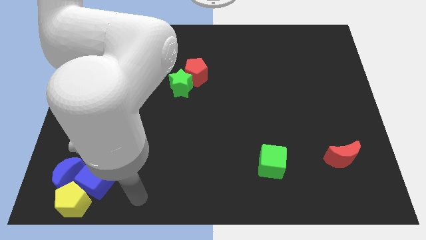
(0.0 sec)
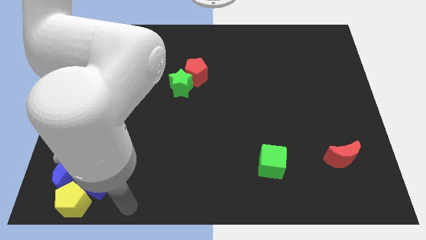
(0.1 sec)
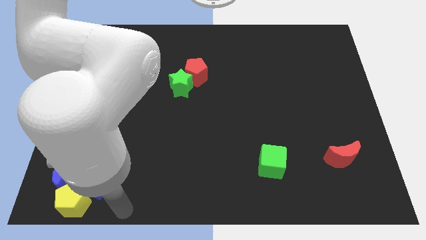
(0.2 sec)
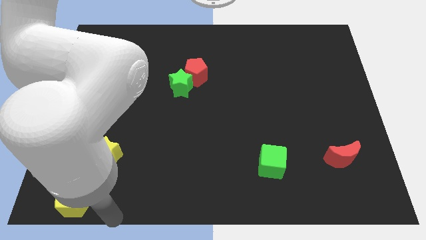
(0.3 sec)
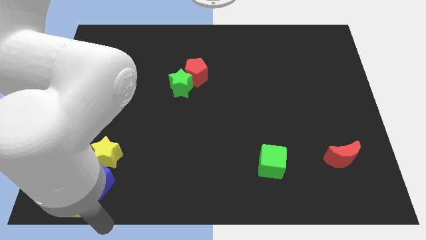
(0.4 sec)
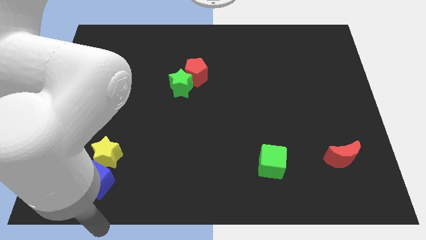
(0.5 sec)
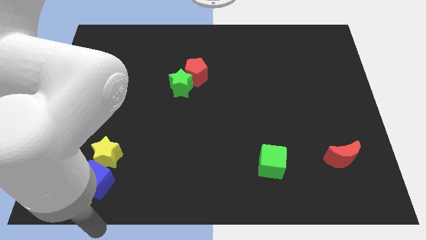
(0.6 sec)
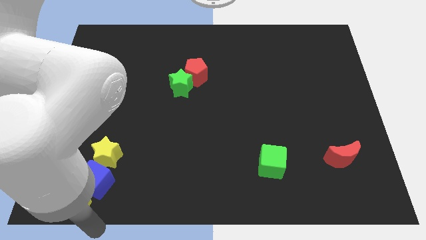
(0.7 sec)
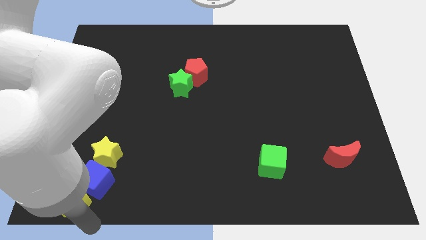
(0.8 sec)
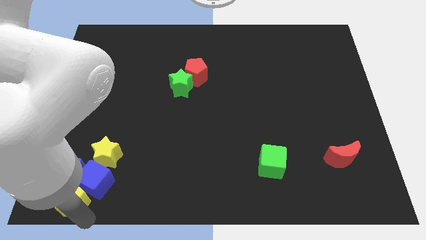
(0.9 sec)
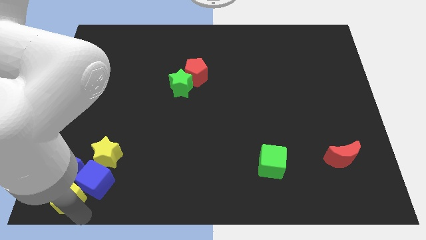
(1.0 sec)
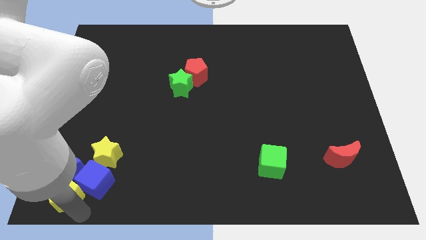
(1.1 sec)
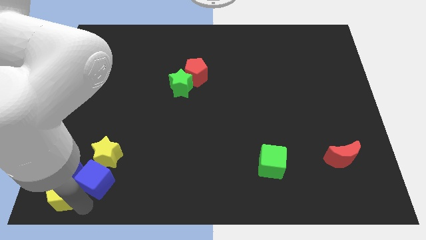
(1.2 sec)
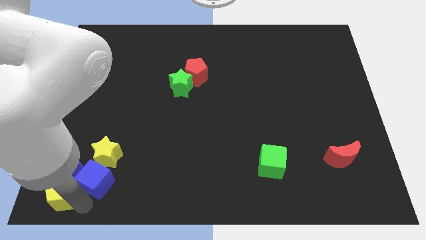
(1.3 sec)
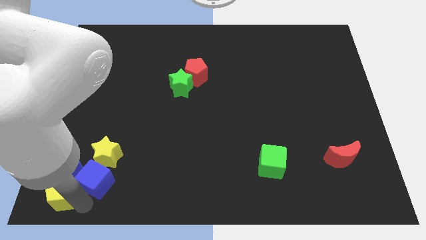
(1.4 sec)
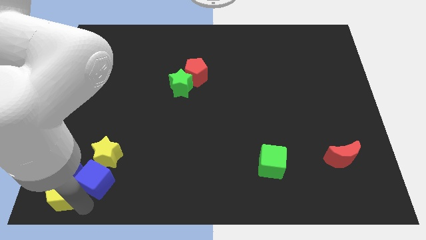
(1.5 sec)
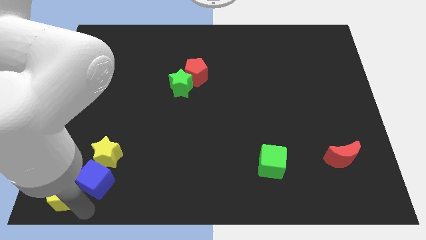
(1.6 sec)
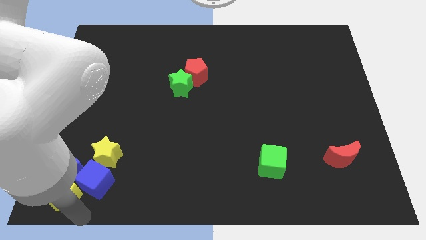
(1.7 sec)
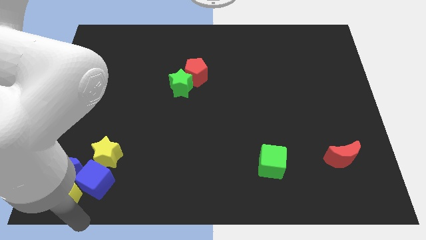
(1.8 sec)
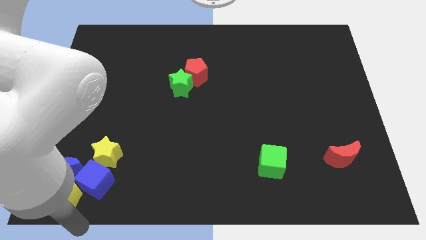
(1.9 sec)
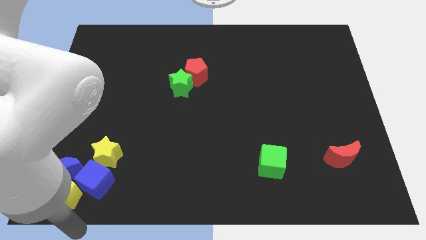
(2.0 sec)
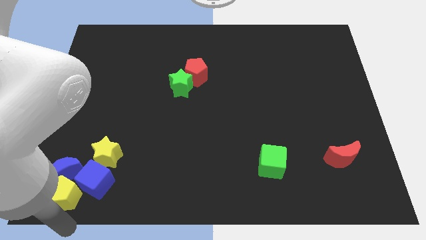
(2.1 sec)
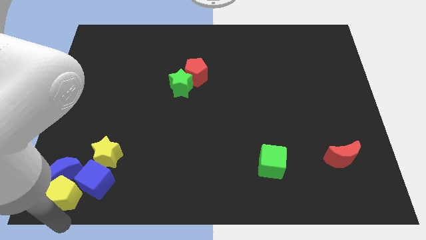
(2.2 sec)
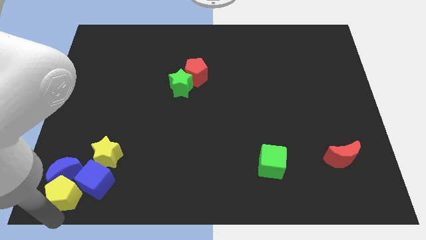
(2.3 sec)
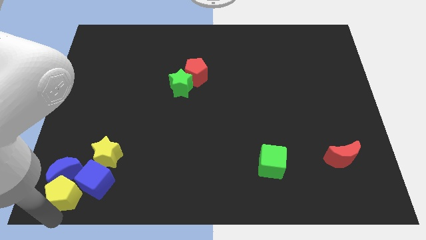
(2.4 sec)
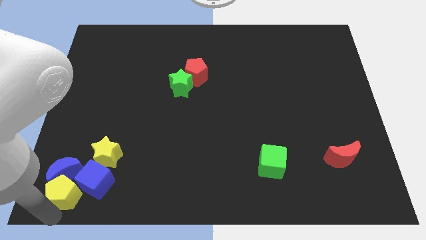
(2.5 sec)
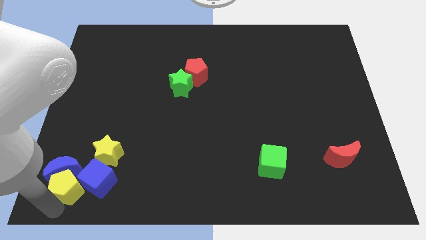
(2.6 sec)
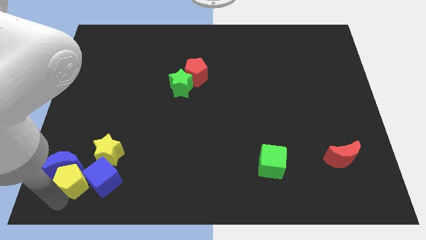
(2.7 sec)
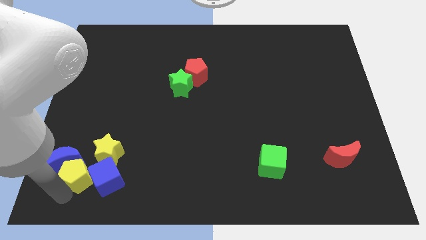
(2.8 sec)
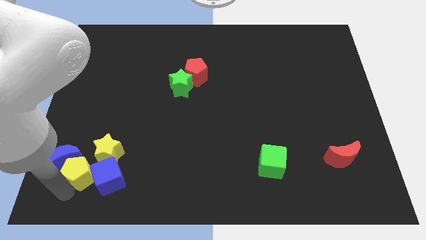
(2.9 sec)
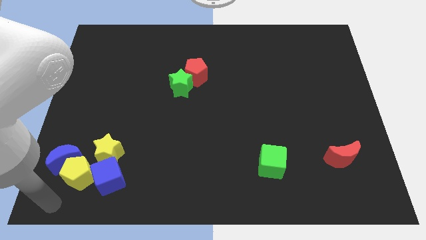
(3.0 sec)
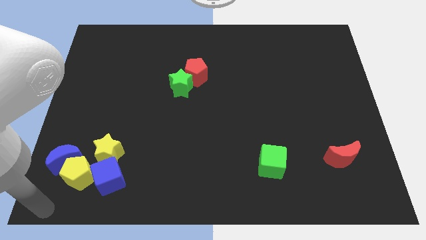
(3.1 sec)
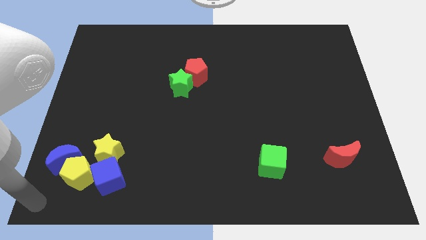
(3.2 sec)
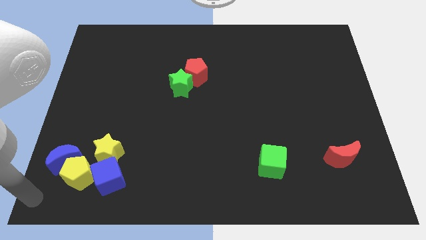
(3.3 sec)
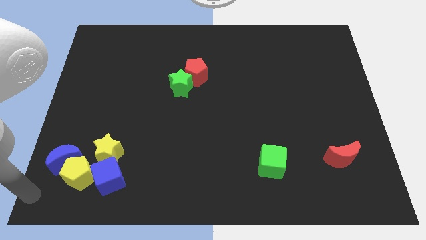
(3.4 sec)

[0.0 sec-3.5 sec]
push the yellow pentagon to the left of the blue cube

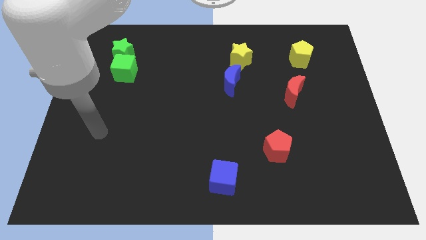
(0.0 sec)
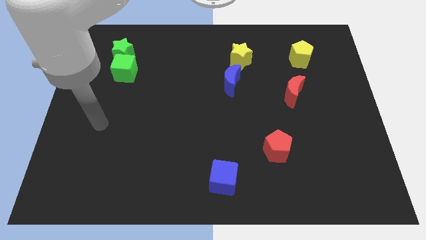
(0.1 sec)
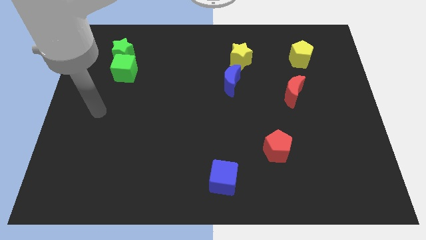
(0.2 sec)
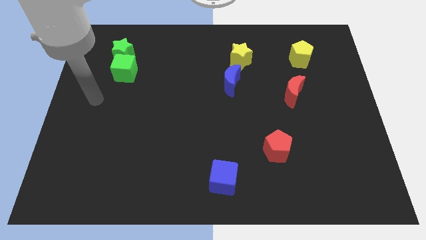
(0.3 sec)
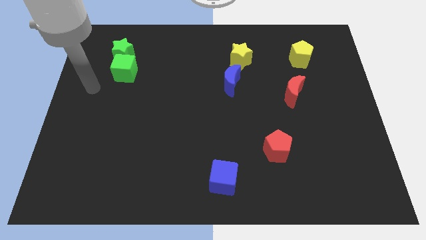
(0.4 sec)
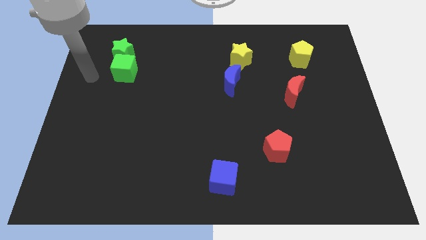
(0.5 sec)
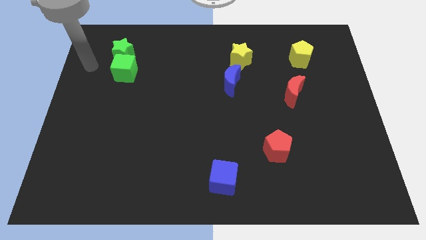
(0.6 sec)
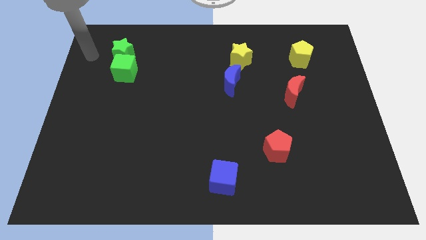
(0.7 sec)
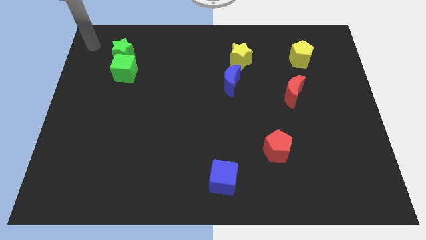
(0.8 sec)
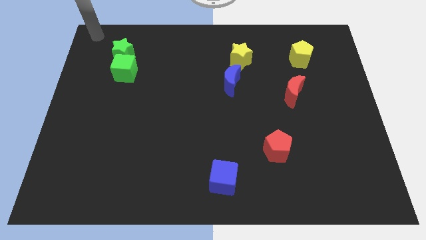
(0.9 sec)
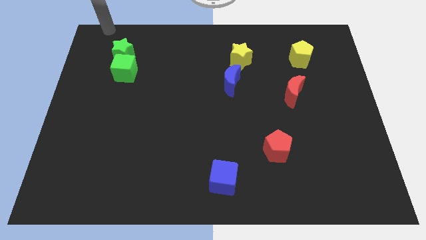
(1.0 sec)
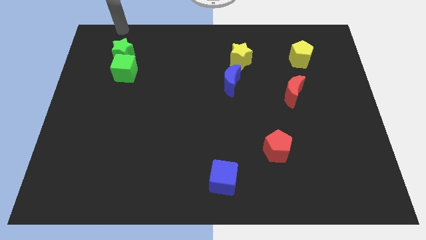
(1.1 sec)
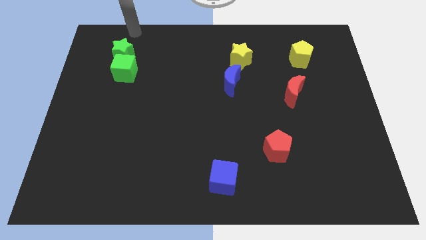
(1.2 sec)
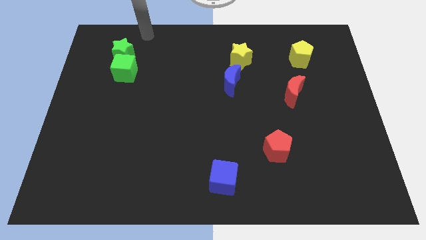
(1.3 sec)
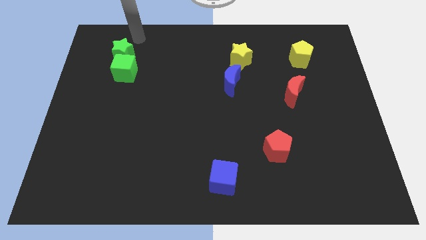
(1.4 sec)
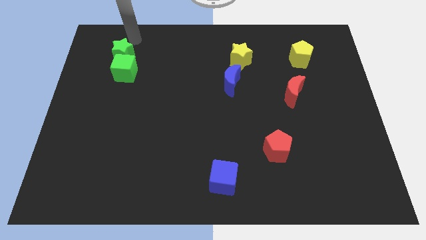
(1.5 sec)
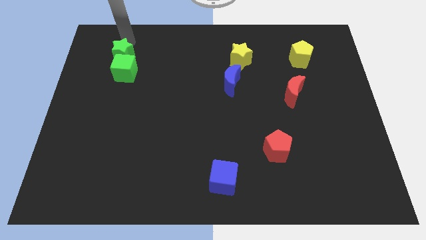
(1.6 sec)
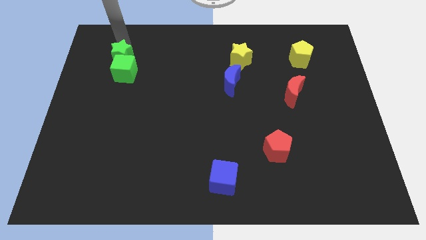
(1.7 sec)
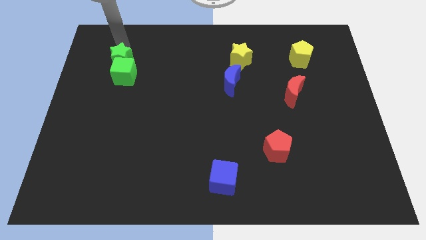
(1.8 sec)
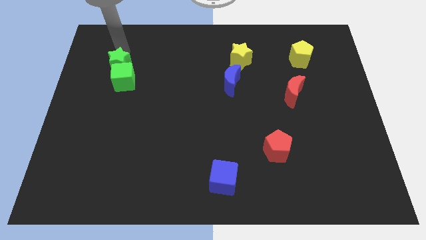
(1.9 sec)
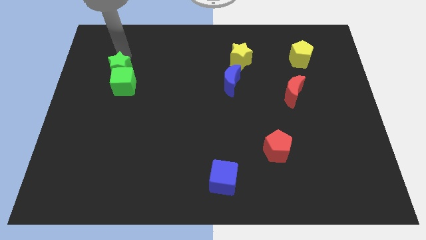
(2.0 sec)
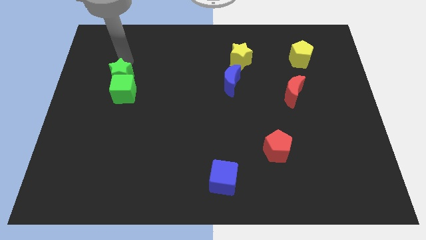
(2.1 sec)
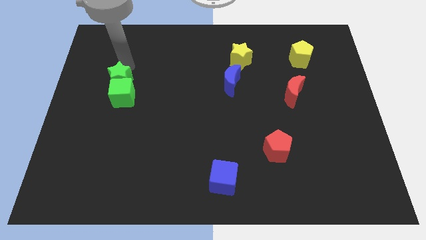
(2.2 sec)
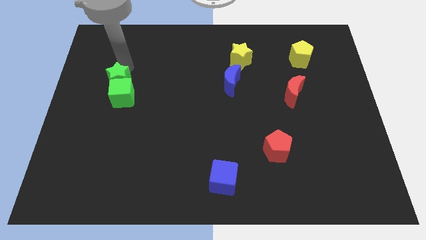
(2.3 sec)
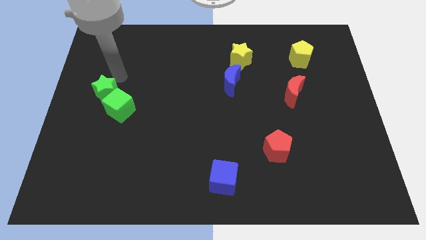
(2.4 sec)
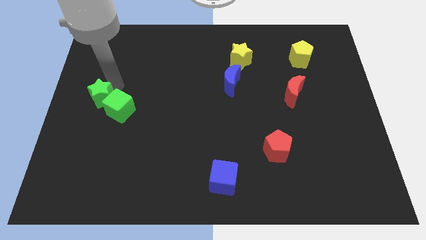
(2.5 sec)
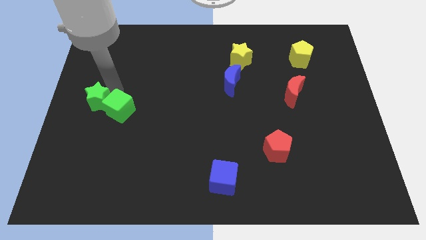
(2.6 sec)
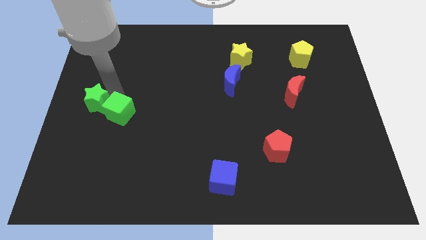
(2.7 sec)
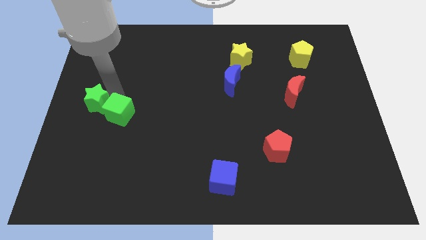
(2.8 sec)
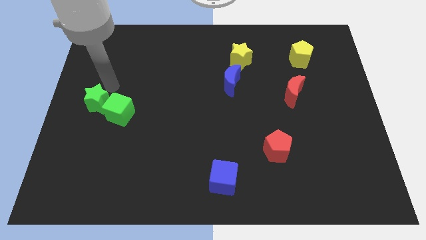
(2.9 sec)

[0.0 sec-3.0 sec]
move the green cube with the green star towards the bottom side

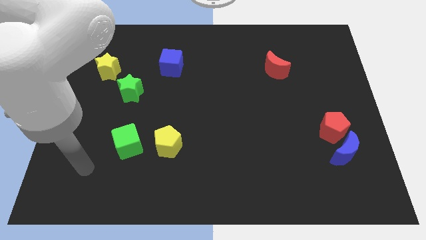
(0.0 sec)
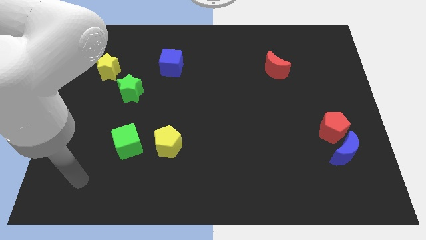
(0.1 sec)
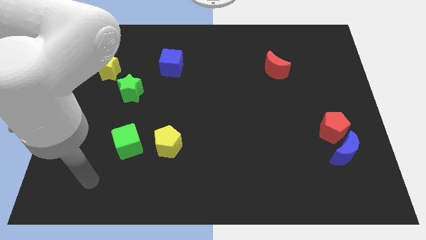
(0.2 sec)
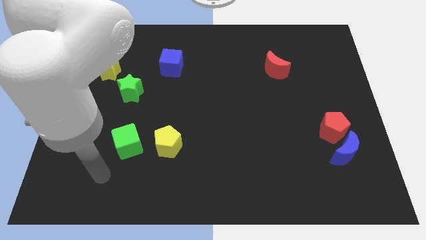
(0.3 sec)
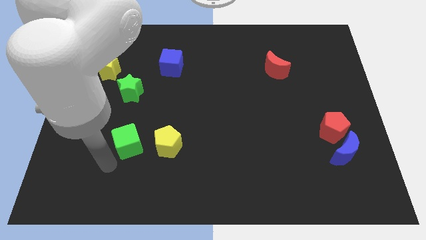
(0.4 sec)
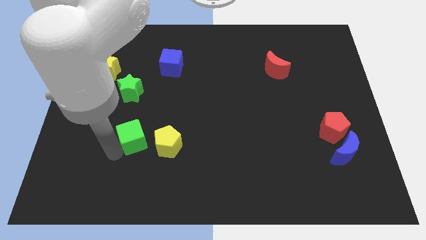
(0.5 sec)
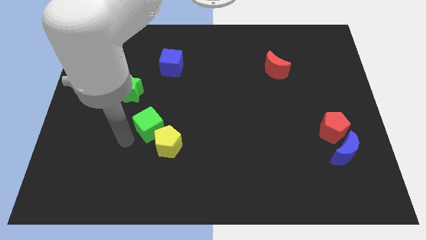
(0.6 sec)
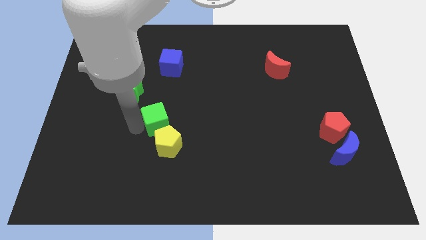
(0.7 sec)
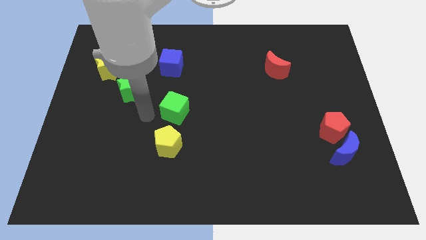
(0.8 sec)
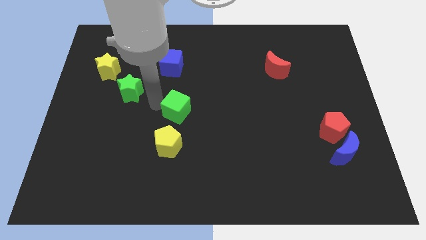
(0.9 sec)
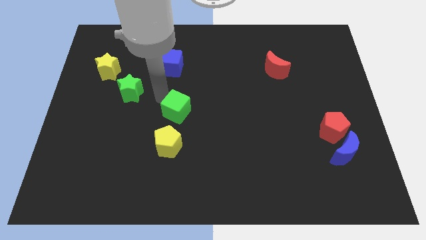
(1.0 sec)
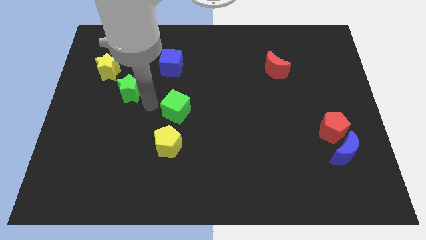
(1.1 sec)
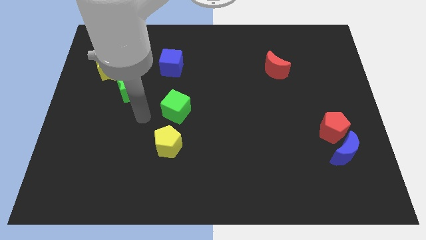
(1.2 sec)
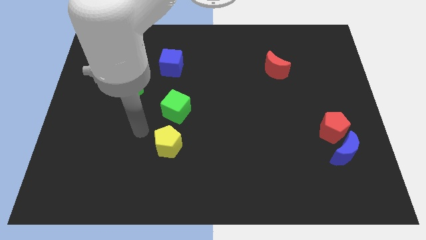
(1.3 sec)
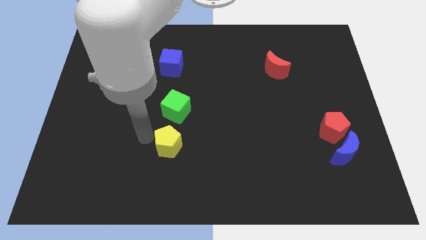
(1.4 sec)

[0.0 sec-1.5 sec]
place the green cube at the top side of the yellow pentagon

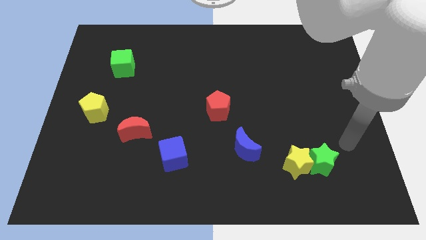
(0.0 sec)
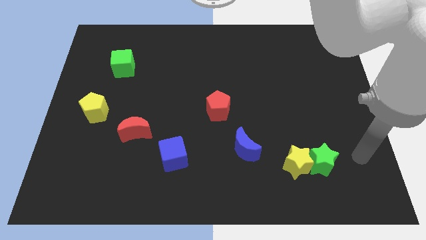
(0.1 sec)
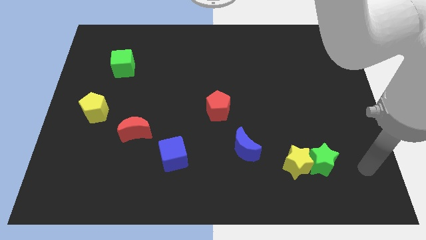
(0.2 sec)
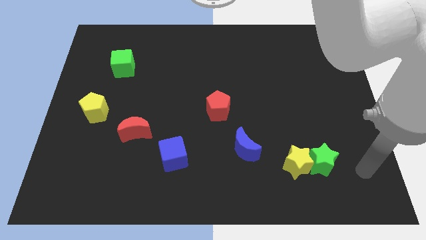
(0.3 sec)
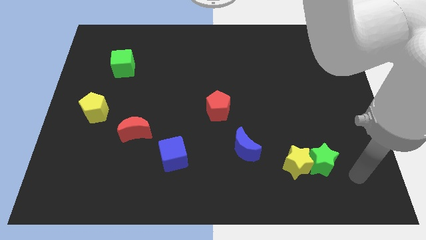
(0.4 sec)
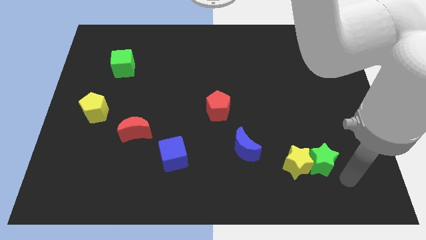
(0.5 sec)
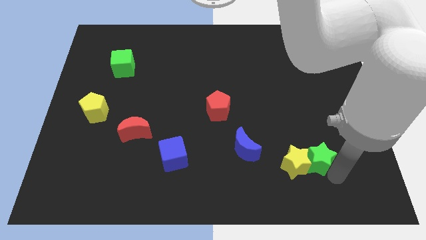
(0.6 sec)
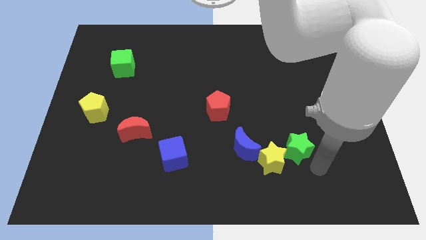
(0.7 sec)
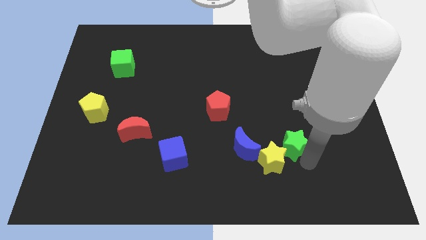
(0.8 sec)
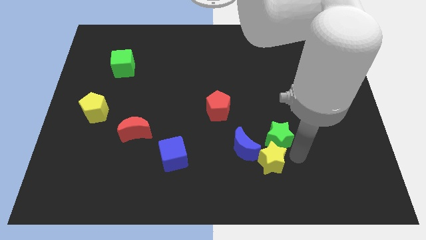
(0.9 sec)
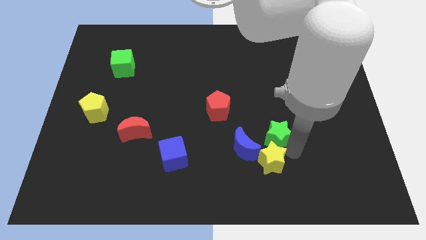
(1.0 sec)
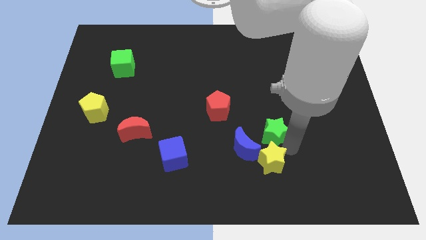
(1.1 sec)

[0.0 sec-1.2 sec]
place the green star above the yellow star
